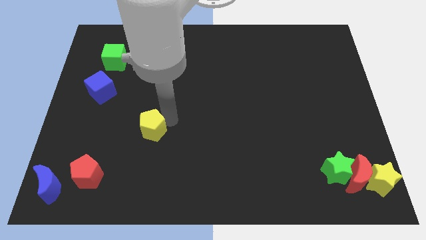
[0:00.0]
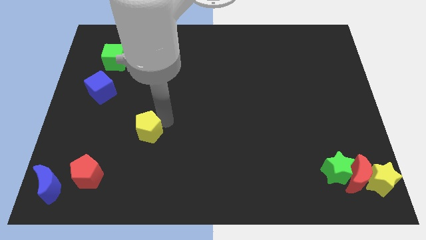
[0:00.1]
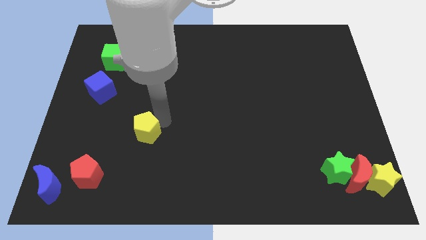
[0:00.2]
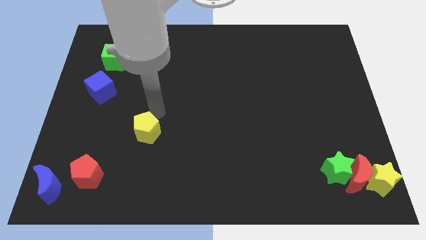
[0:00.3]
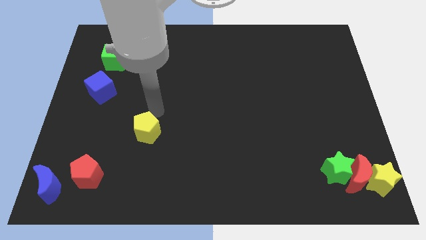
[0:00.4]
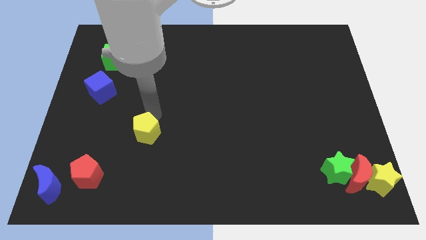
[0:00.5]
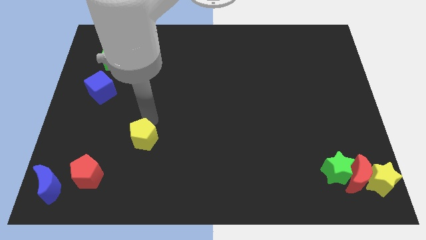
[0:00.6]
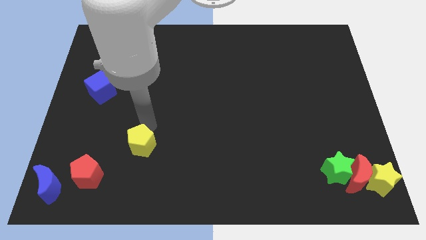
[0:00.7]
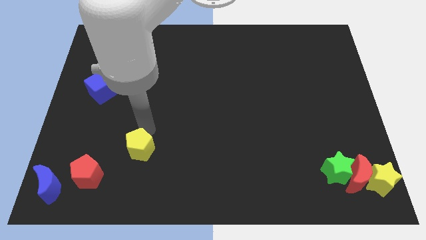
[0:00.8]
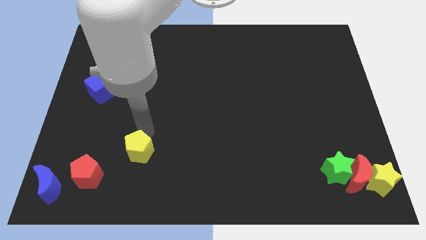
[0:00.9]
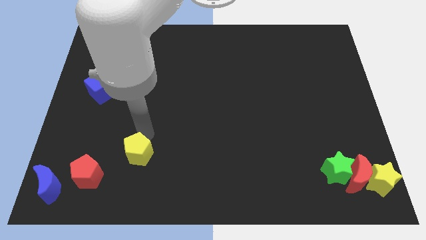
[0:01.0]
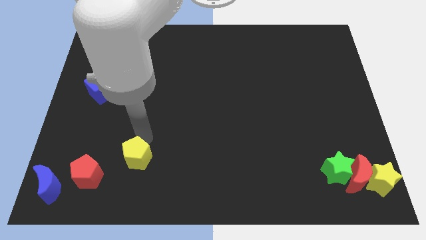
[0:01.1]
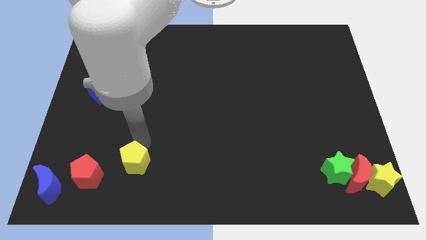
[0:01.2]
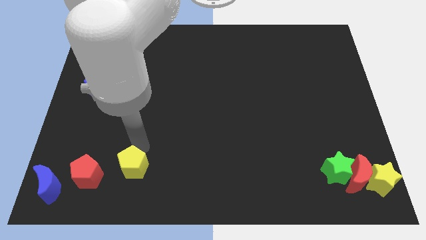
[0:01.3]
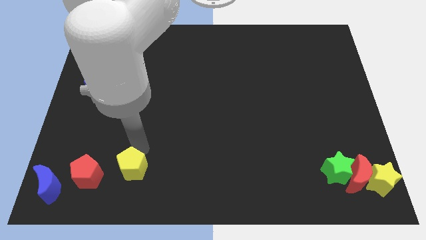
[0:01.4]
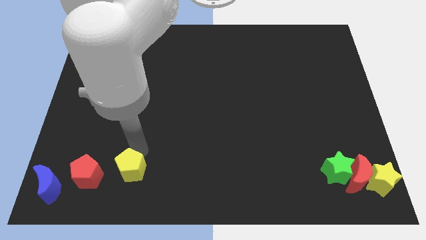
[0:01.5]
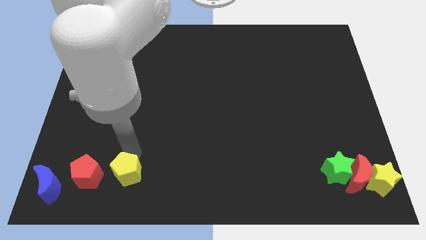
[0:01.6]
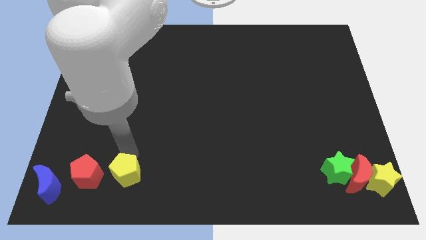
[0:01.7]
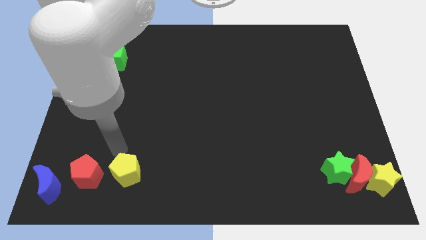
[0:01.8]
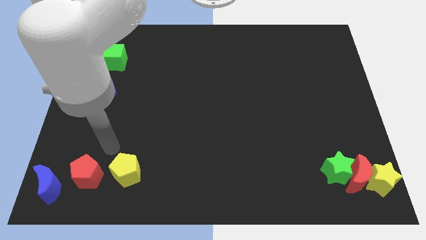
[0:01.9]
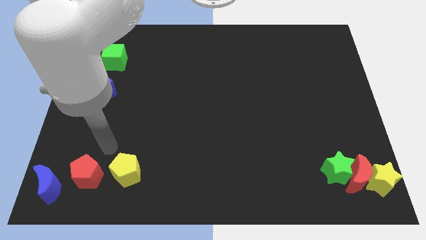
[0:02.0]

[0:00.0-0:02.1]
place yellow pentagon beside red pentagon

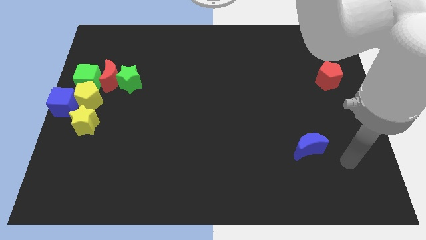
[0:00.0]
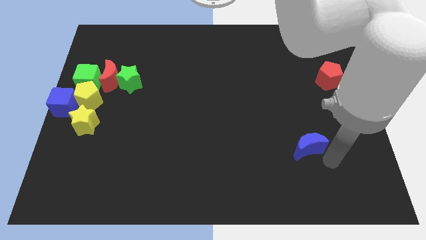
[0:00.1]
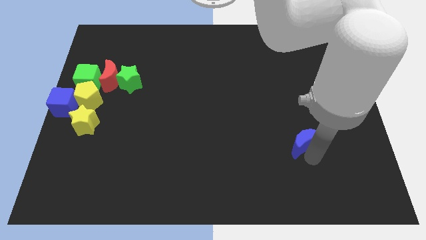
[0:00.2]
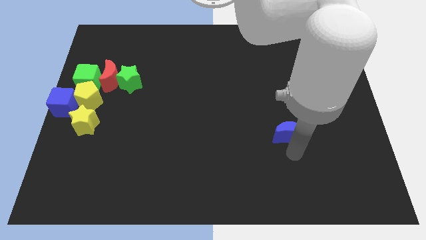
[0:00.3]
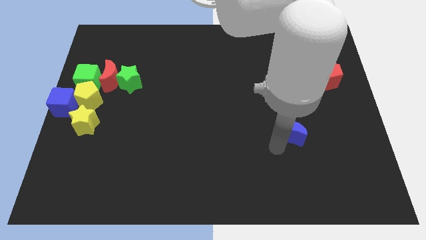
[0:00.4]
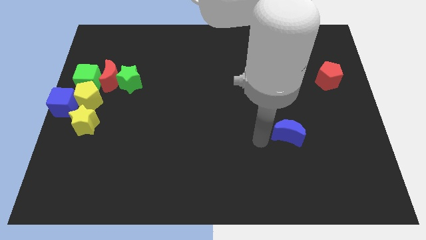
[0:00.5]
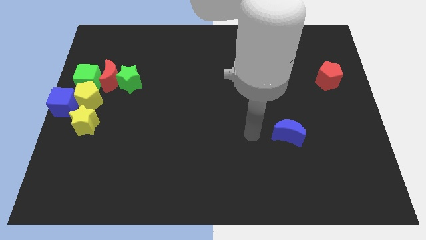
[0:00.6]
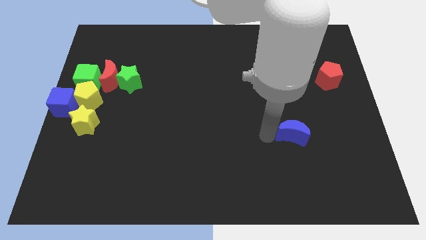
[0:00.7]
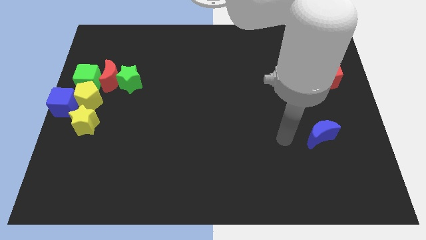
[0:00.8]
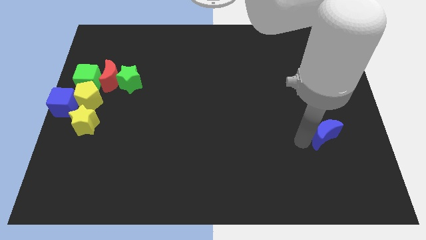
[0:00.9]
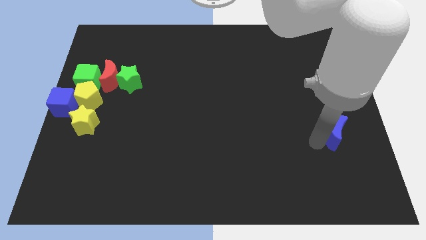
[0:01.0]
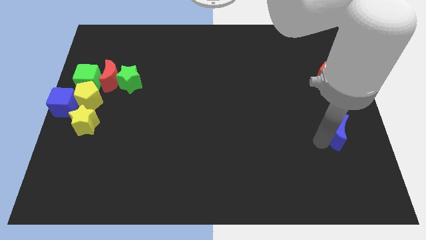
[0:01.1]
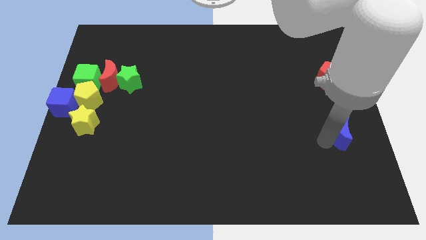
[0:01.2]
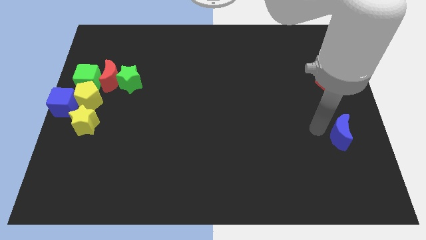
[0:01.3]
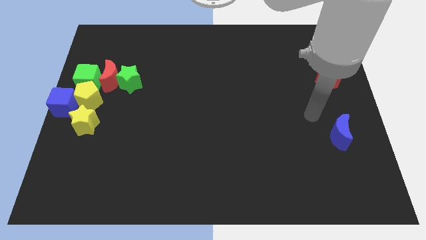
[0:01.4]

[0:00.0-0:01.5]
place the blue moon down to the red pentagon

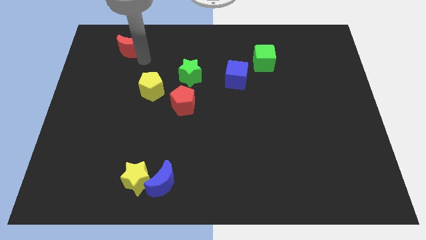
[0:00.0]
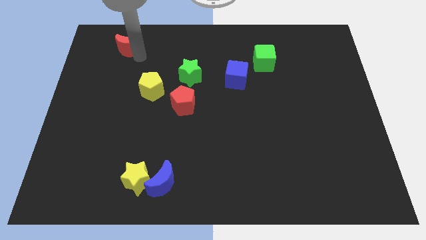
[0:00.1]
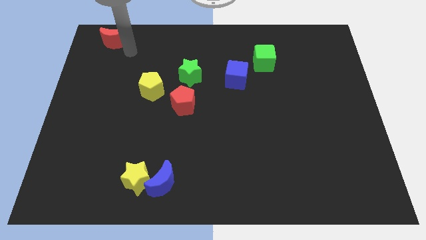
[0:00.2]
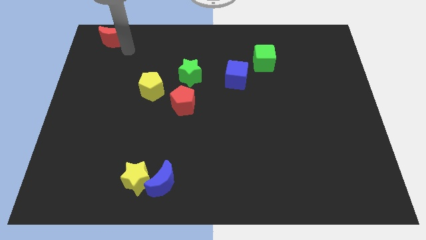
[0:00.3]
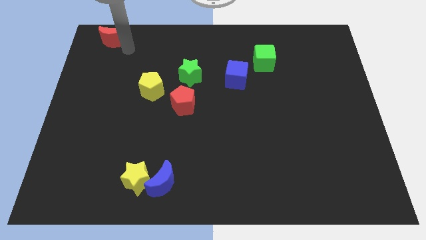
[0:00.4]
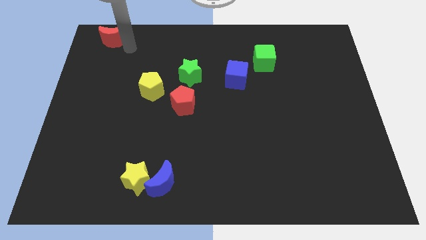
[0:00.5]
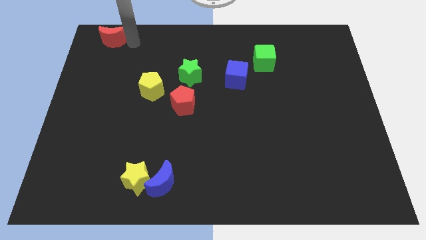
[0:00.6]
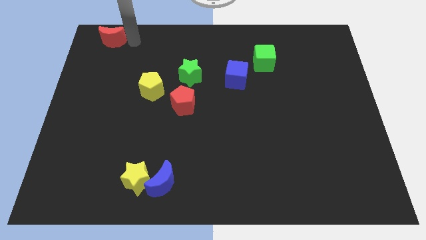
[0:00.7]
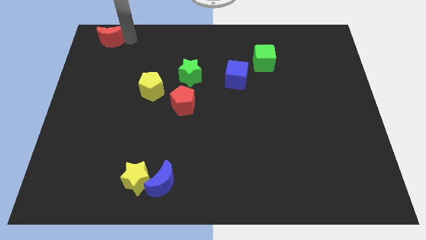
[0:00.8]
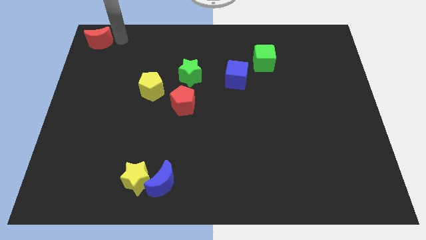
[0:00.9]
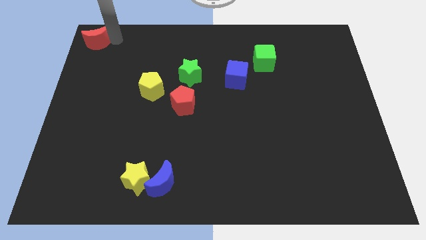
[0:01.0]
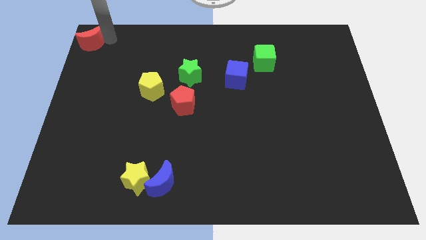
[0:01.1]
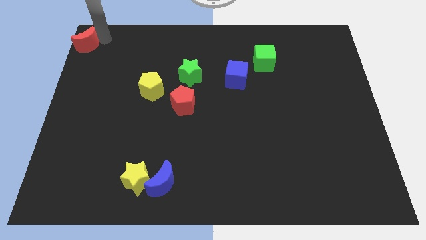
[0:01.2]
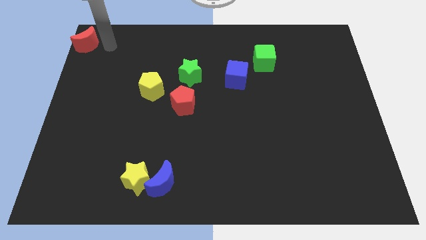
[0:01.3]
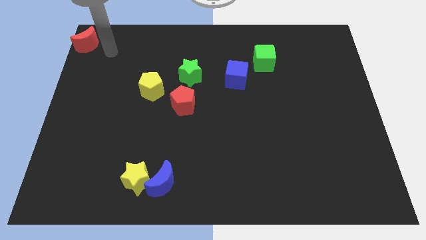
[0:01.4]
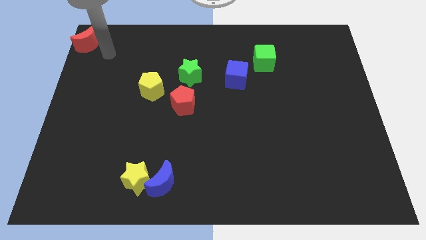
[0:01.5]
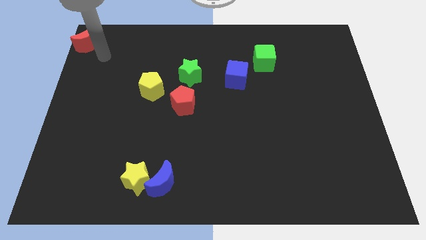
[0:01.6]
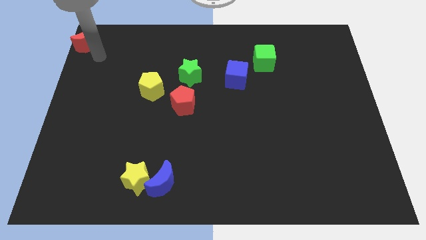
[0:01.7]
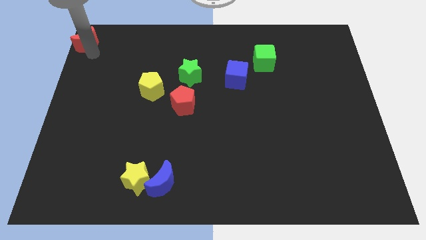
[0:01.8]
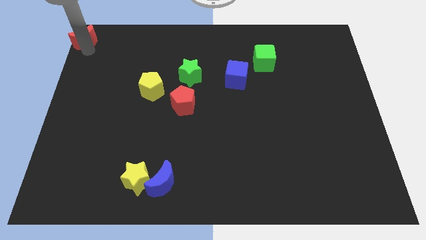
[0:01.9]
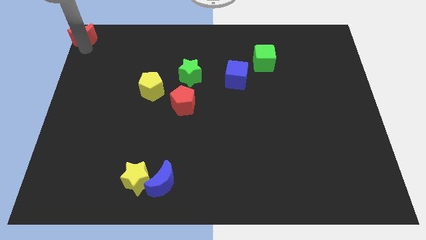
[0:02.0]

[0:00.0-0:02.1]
move red moon to the top left corner of the board

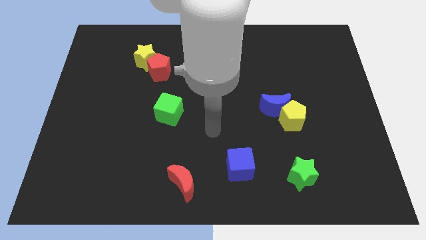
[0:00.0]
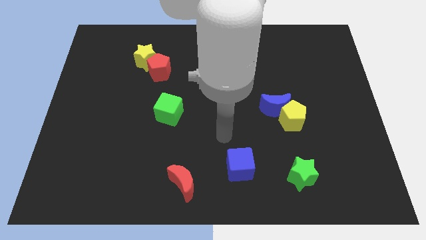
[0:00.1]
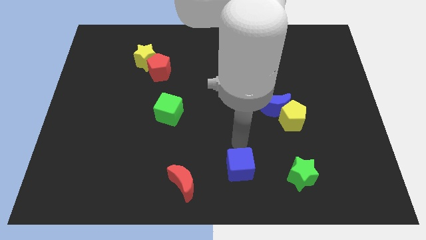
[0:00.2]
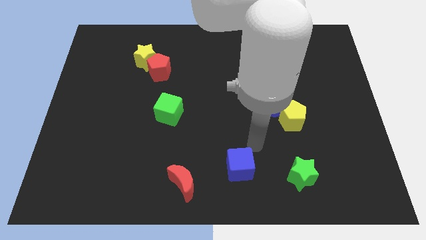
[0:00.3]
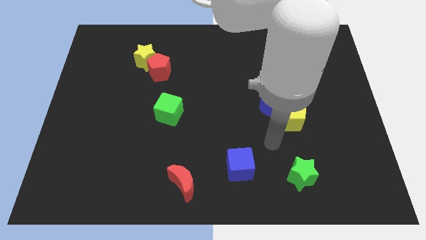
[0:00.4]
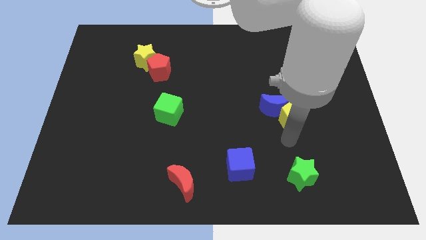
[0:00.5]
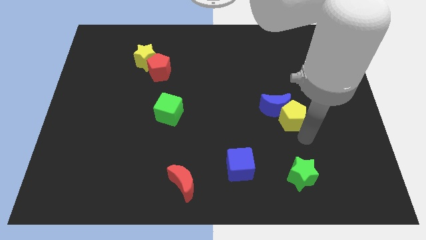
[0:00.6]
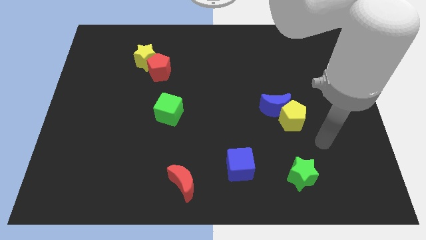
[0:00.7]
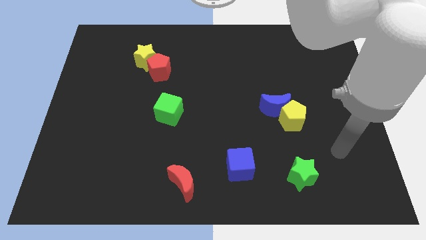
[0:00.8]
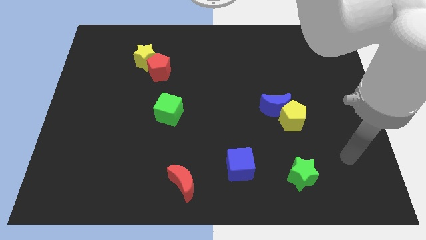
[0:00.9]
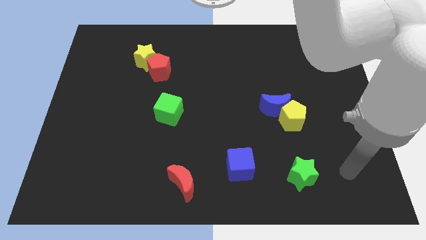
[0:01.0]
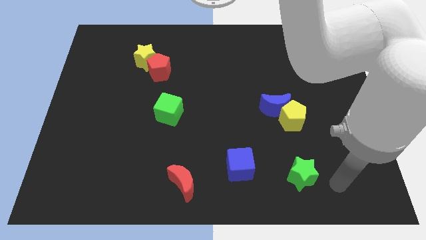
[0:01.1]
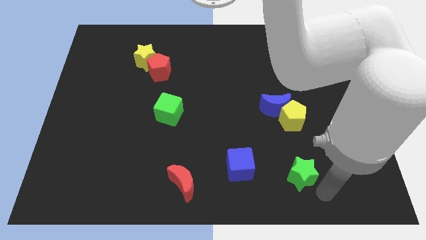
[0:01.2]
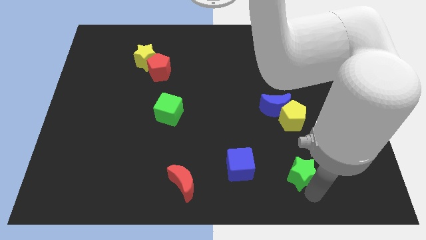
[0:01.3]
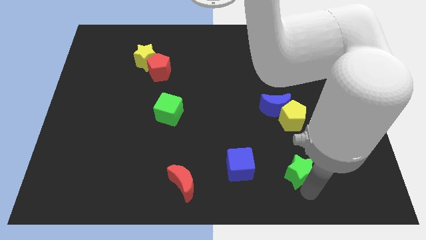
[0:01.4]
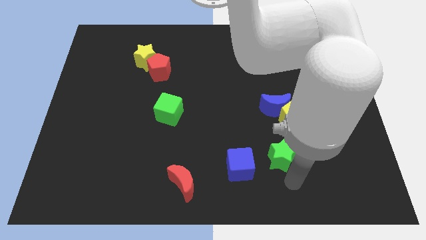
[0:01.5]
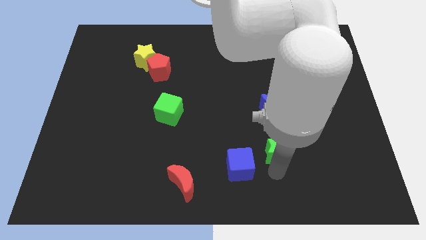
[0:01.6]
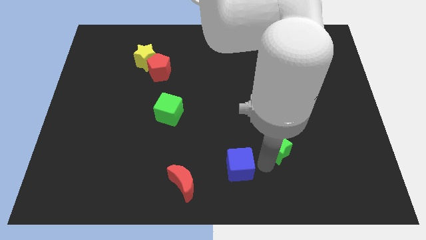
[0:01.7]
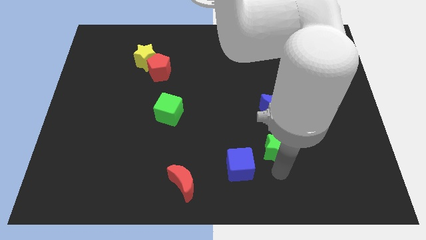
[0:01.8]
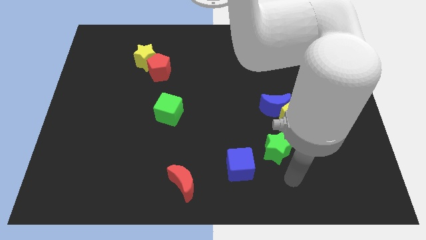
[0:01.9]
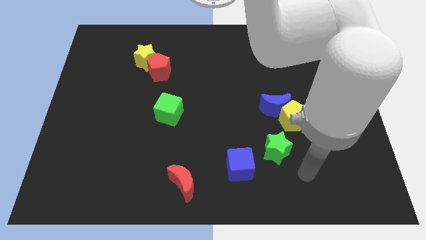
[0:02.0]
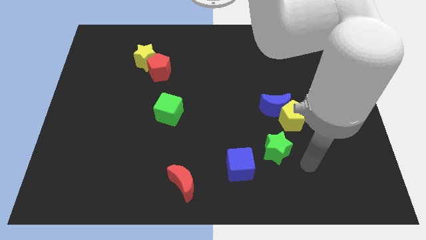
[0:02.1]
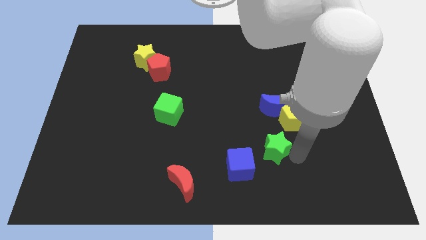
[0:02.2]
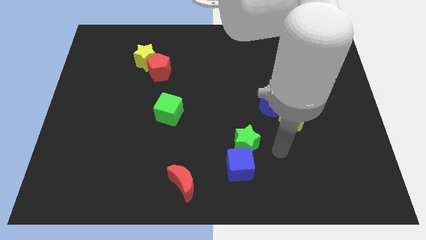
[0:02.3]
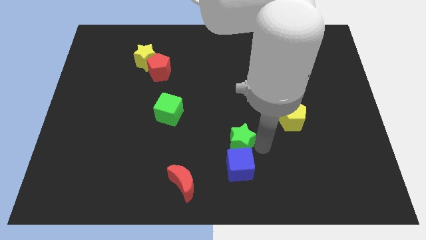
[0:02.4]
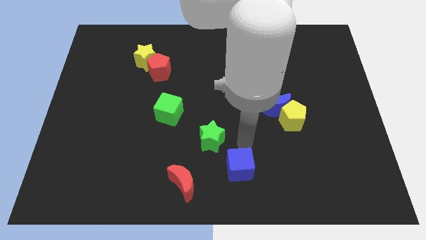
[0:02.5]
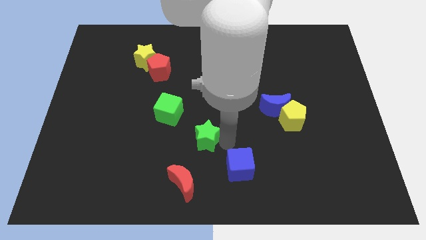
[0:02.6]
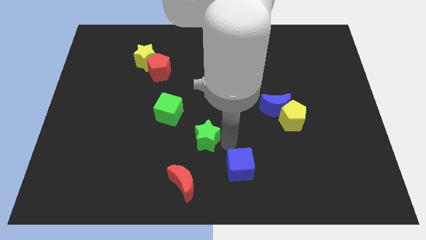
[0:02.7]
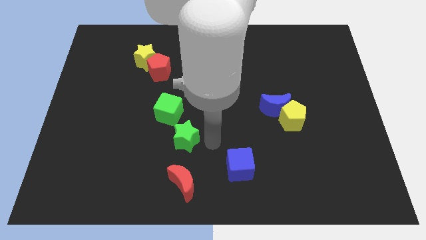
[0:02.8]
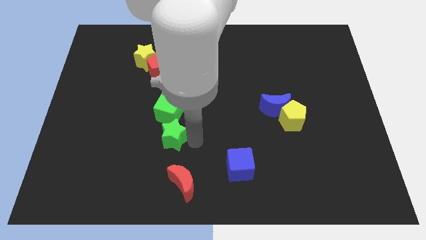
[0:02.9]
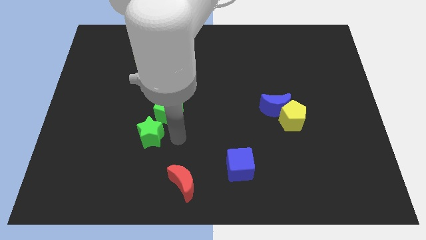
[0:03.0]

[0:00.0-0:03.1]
place the green star below the green cube

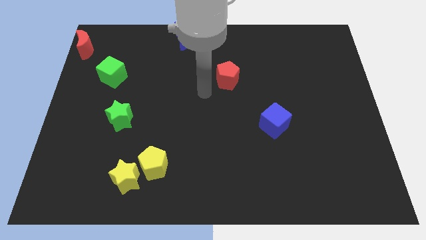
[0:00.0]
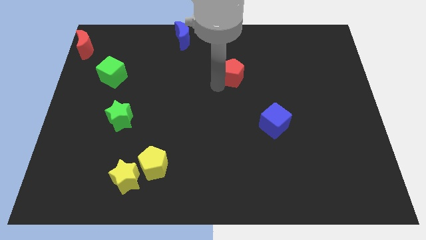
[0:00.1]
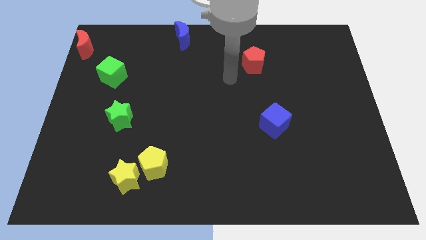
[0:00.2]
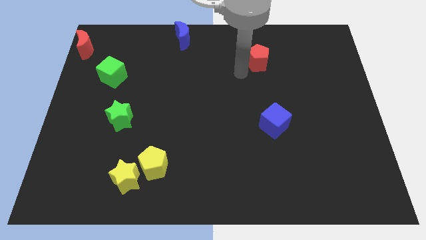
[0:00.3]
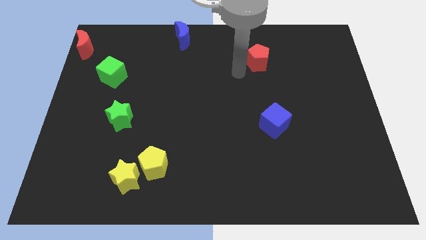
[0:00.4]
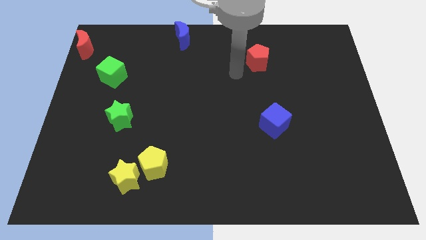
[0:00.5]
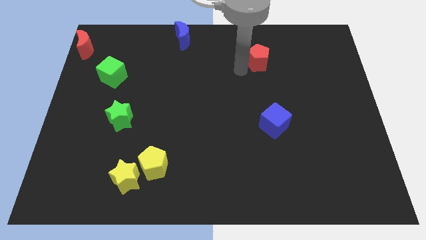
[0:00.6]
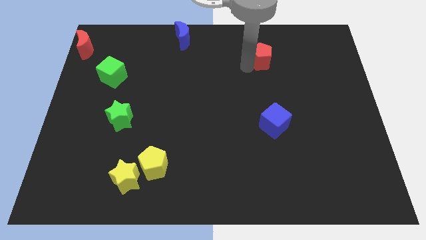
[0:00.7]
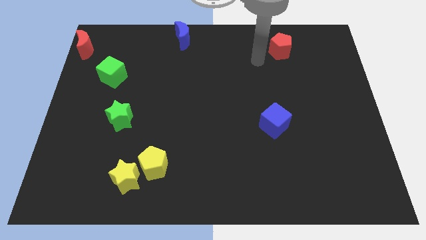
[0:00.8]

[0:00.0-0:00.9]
place the red pentagon vertically above the blue cube
